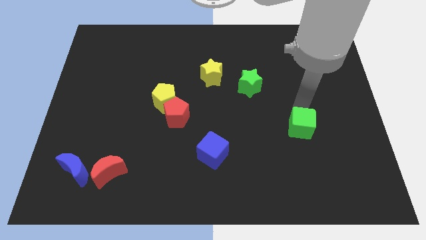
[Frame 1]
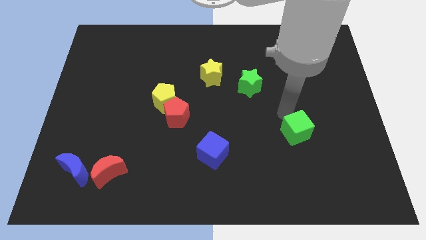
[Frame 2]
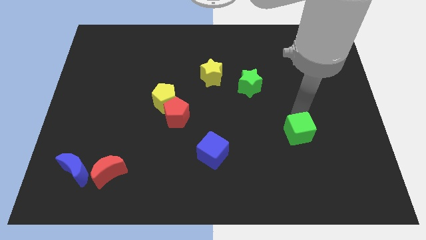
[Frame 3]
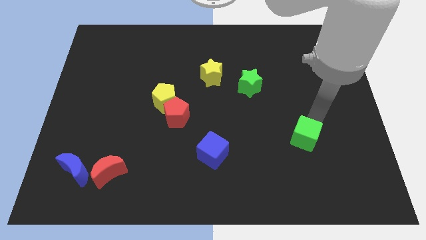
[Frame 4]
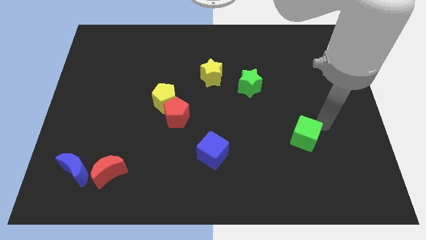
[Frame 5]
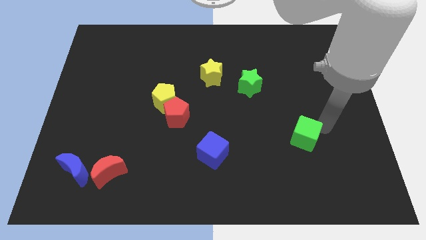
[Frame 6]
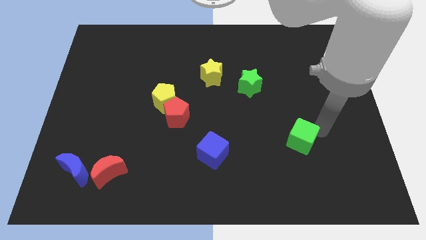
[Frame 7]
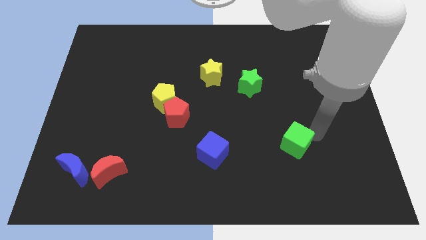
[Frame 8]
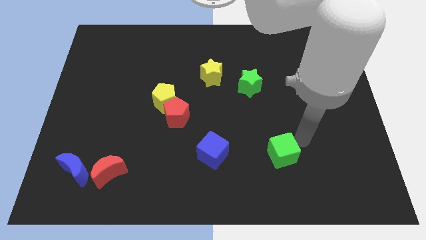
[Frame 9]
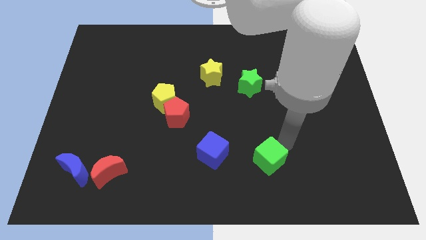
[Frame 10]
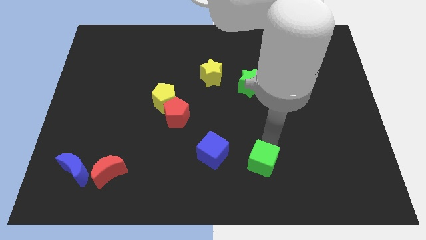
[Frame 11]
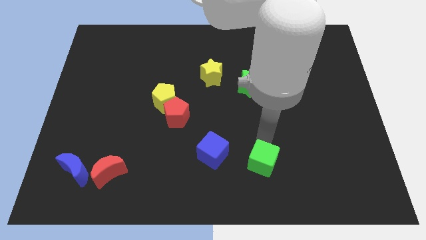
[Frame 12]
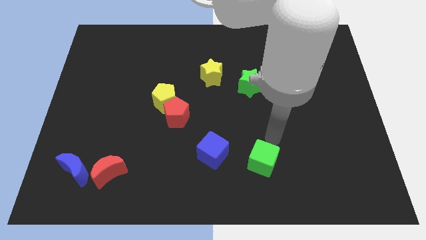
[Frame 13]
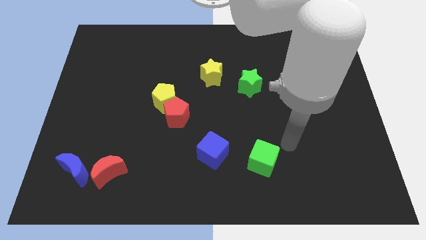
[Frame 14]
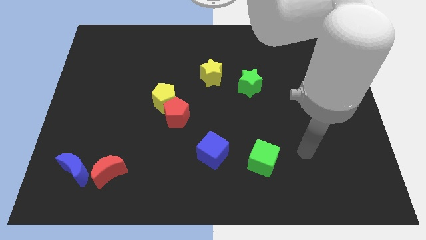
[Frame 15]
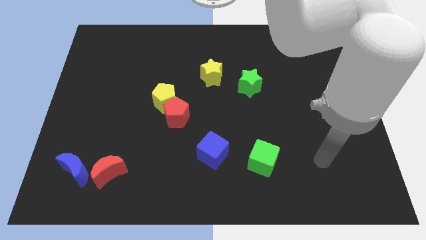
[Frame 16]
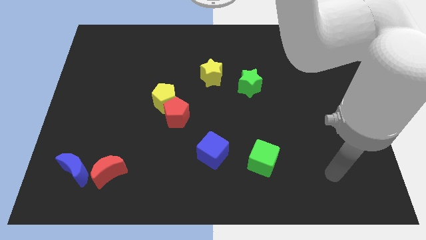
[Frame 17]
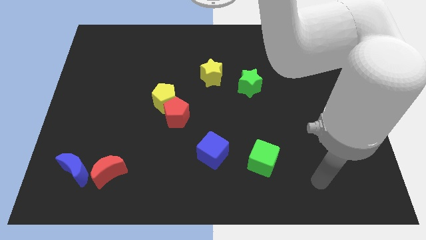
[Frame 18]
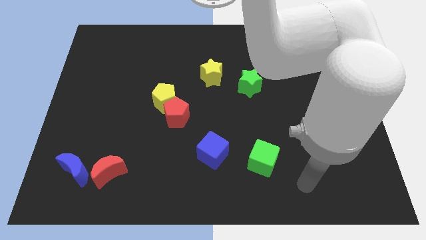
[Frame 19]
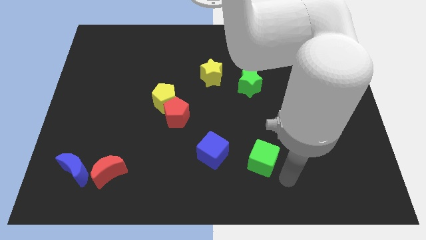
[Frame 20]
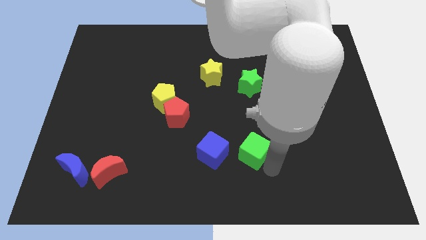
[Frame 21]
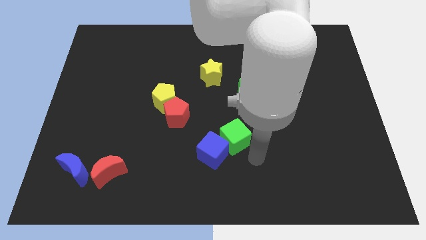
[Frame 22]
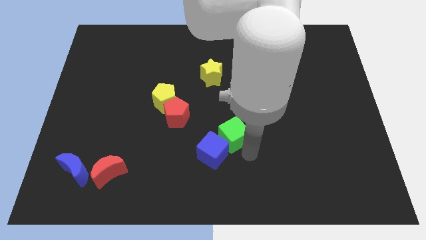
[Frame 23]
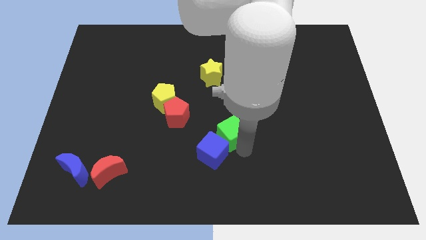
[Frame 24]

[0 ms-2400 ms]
push green cube towards the blue cube

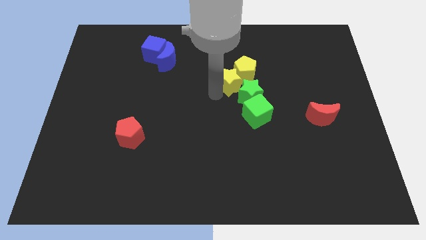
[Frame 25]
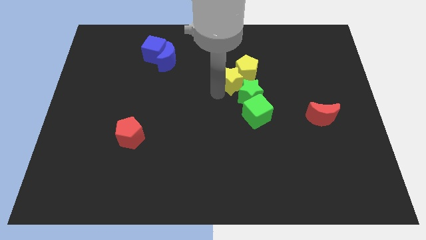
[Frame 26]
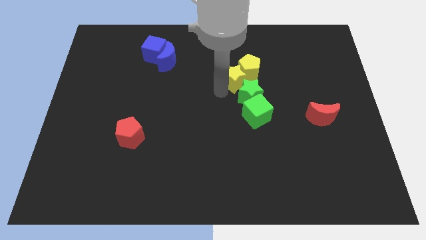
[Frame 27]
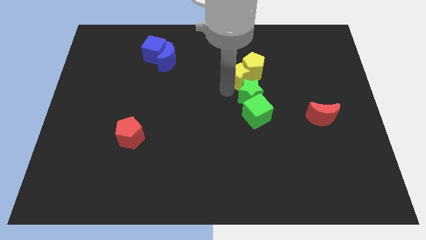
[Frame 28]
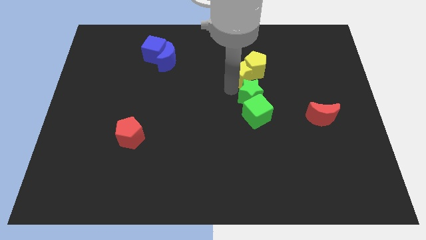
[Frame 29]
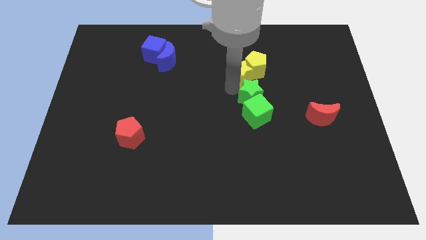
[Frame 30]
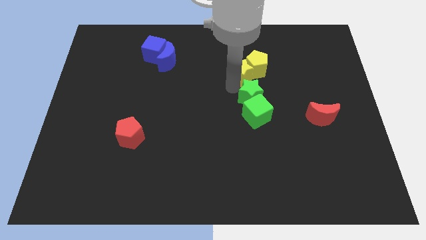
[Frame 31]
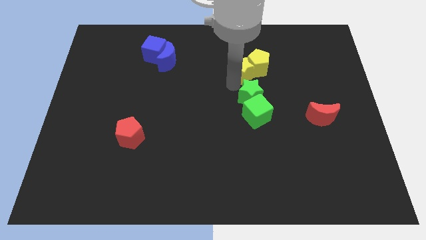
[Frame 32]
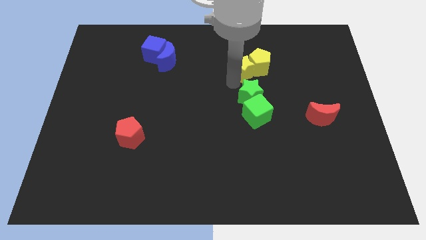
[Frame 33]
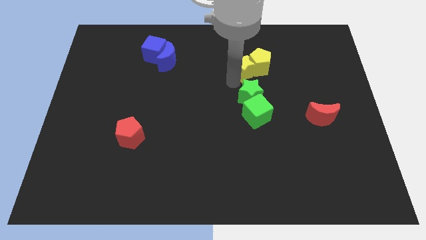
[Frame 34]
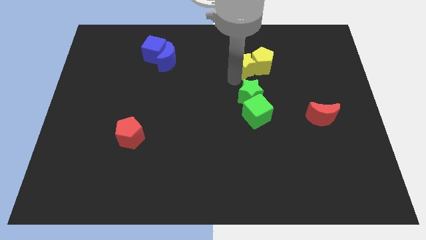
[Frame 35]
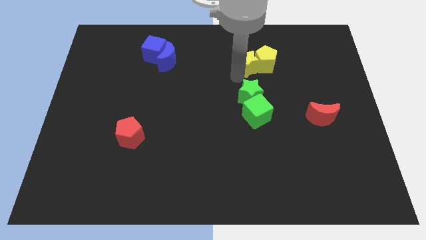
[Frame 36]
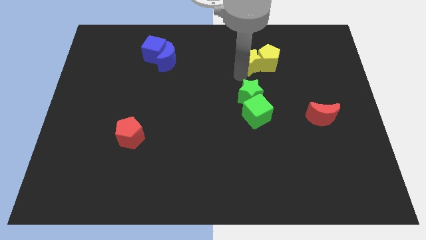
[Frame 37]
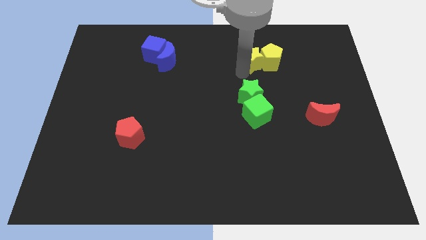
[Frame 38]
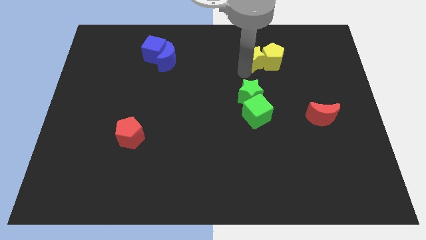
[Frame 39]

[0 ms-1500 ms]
separate the yellow pentagon and yellow star from the green blocks

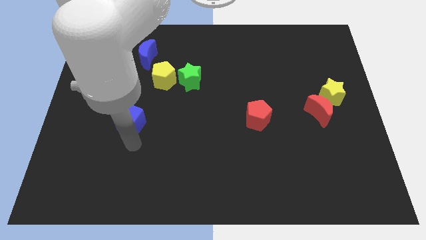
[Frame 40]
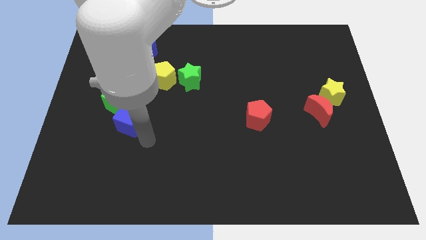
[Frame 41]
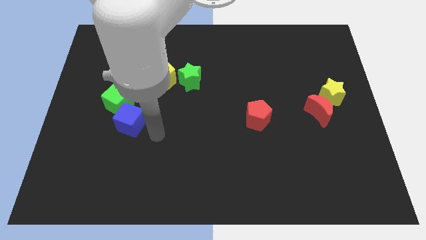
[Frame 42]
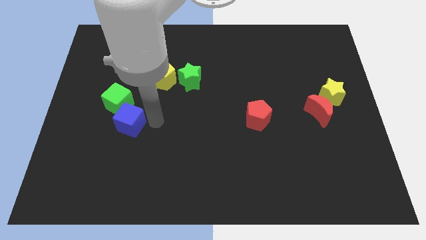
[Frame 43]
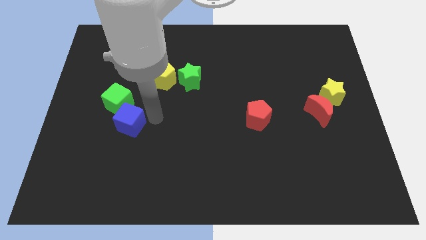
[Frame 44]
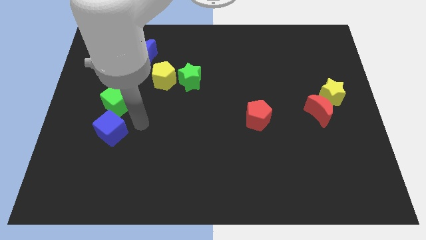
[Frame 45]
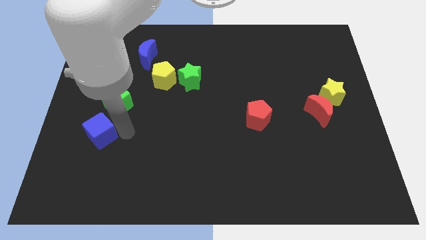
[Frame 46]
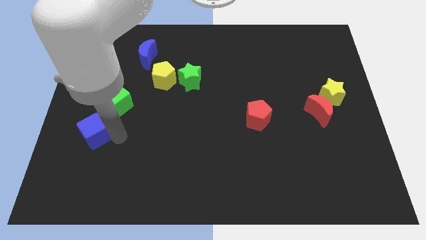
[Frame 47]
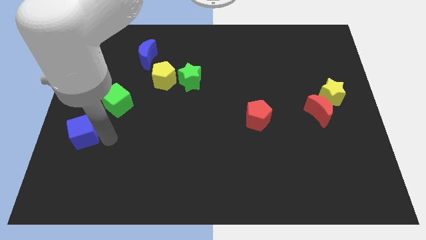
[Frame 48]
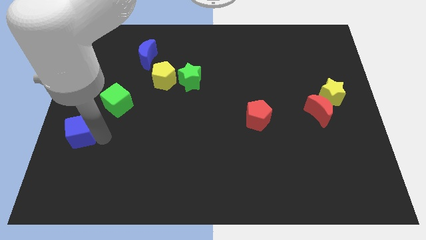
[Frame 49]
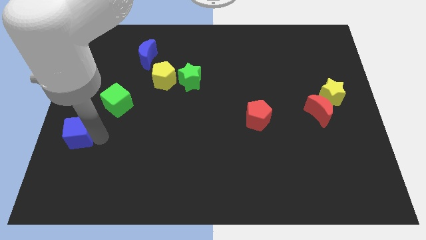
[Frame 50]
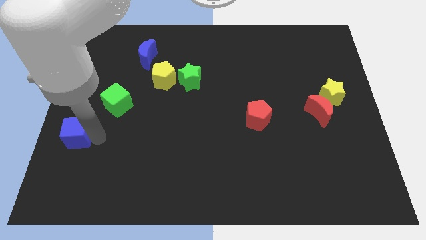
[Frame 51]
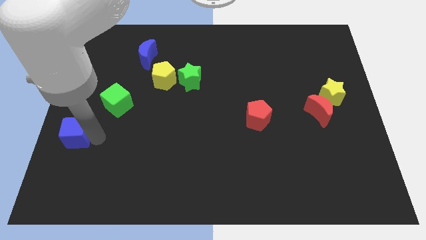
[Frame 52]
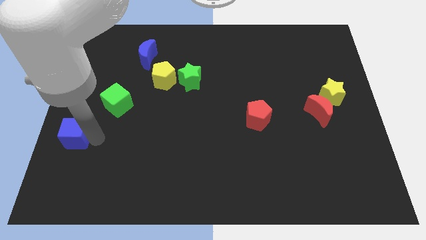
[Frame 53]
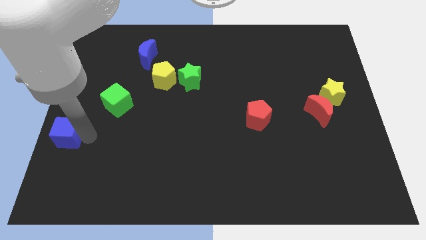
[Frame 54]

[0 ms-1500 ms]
move the blue cube to the center left

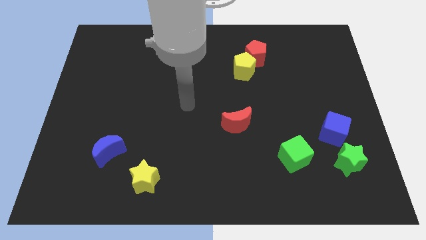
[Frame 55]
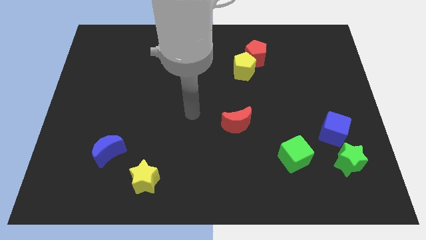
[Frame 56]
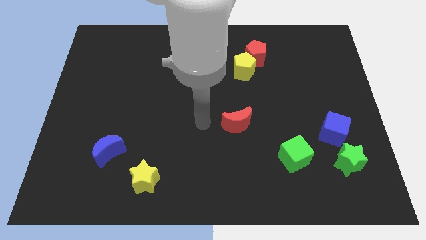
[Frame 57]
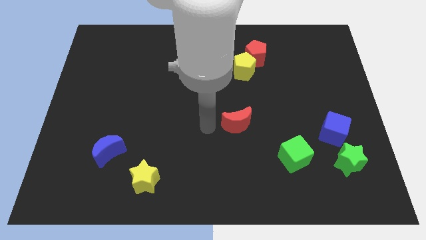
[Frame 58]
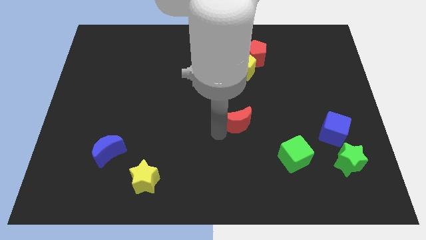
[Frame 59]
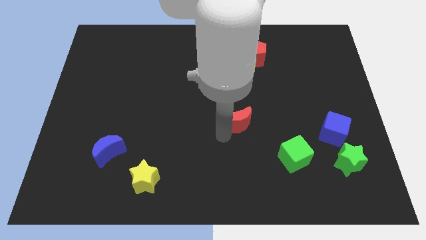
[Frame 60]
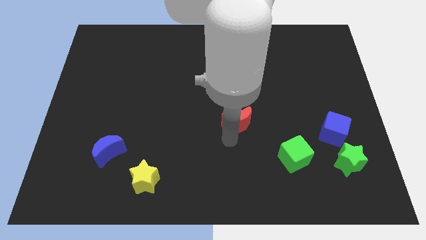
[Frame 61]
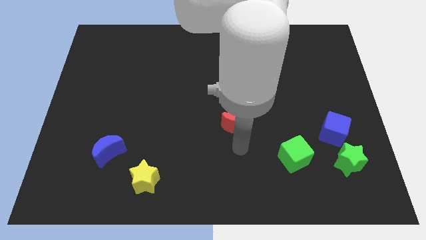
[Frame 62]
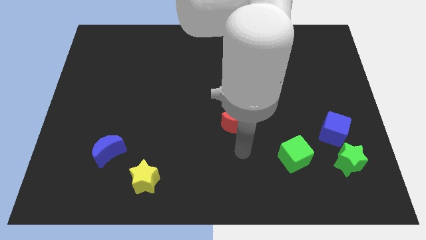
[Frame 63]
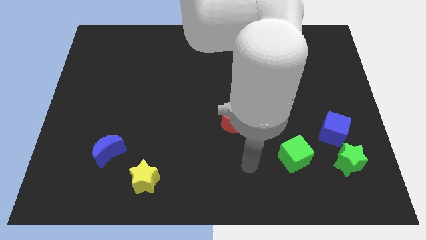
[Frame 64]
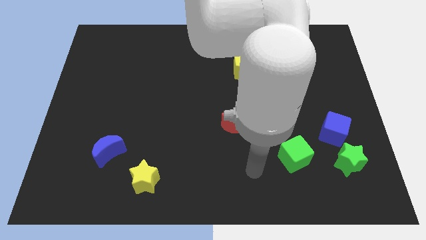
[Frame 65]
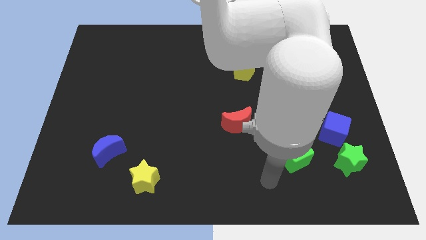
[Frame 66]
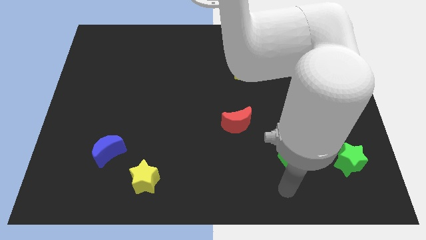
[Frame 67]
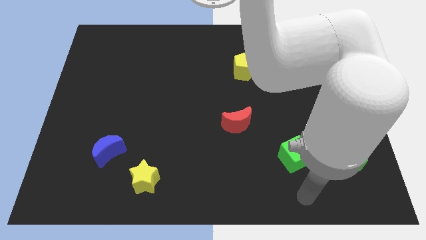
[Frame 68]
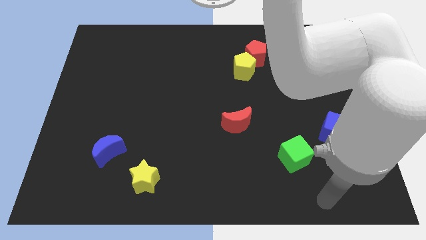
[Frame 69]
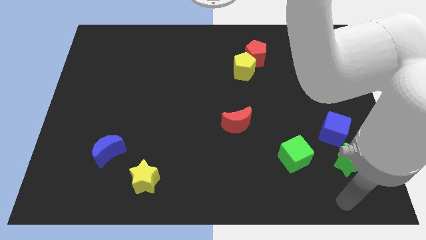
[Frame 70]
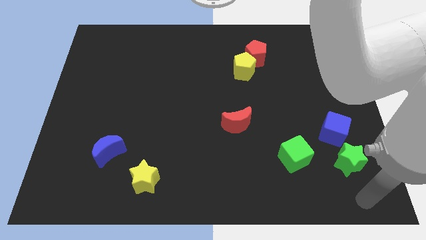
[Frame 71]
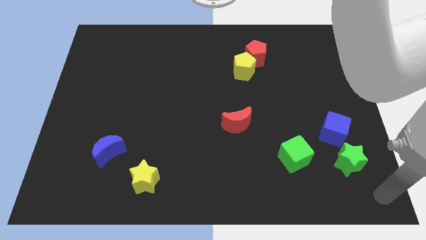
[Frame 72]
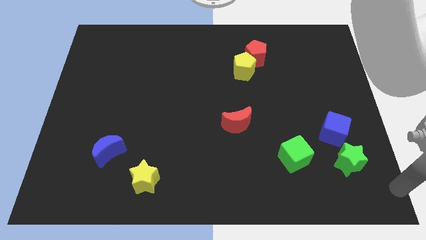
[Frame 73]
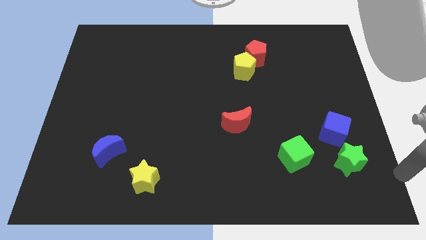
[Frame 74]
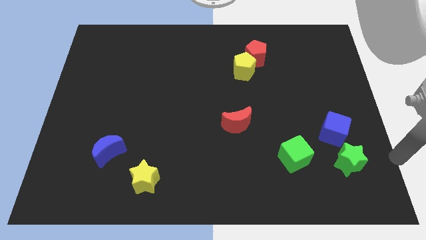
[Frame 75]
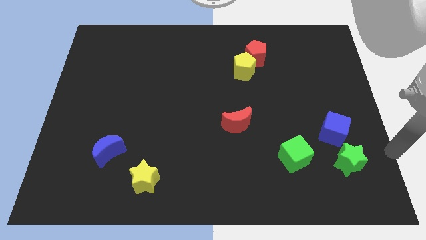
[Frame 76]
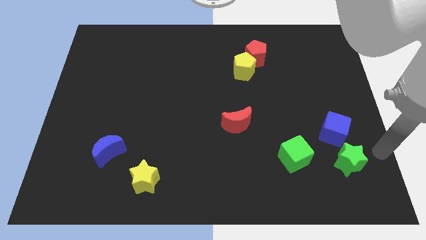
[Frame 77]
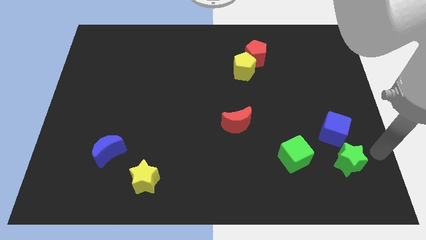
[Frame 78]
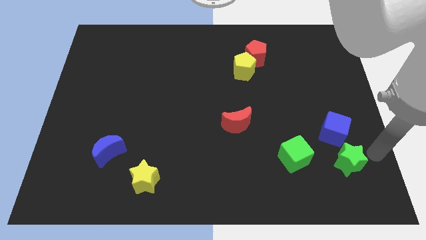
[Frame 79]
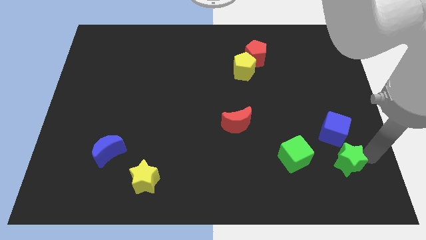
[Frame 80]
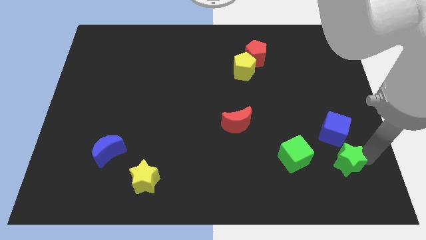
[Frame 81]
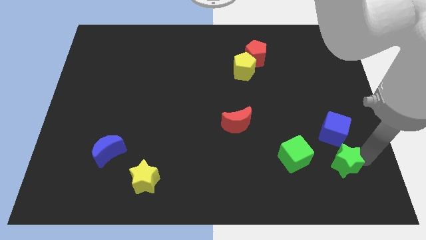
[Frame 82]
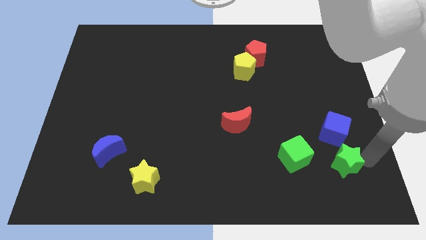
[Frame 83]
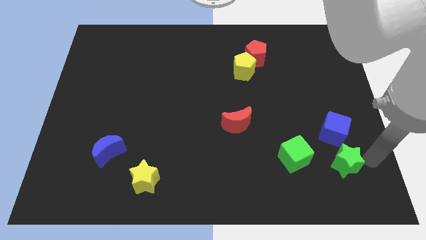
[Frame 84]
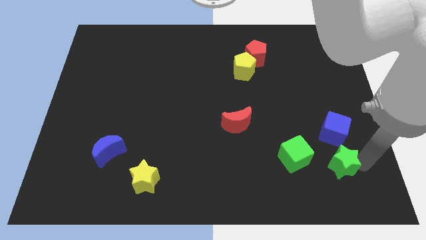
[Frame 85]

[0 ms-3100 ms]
tap on the right edge of green star

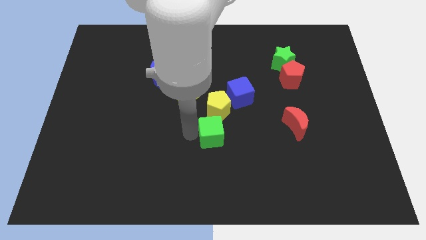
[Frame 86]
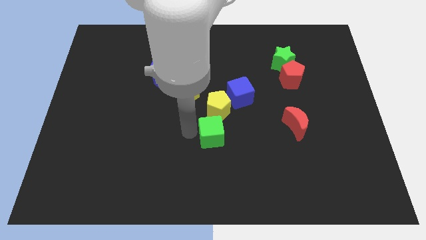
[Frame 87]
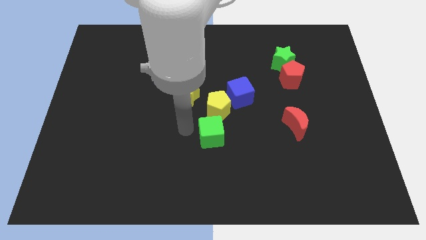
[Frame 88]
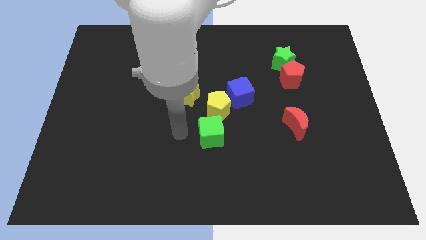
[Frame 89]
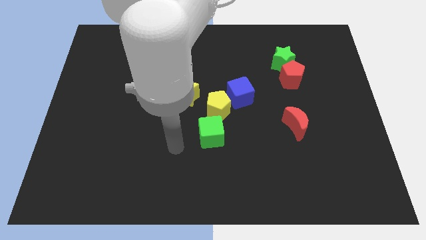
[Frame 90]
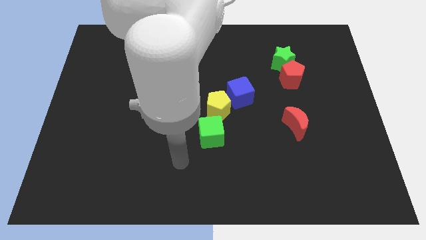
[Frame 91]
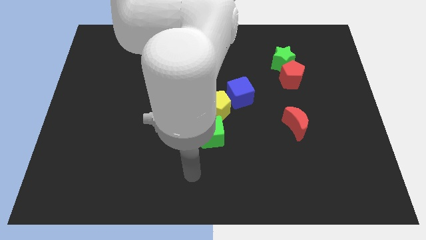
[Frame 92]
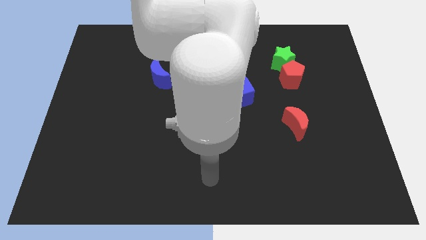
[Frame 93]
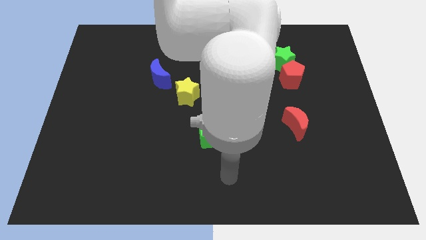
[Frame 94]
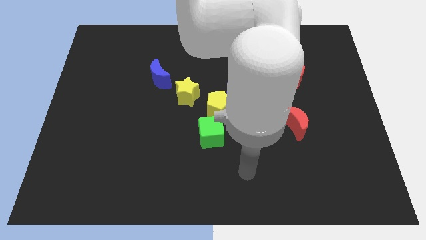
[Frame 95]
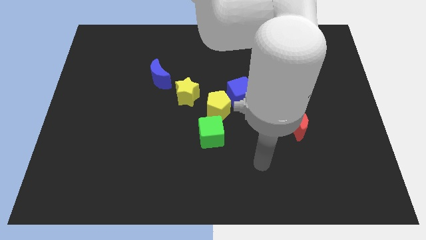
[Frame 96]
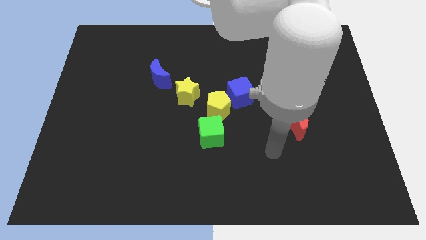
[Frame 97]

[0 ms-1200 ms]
move the arm away from the green cube
